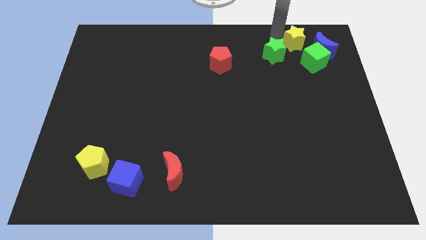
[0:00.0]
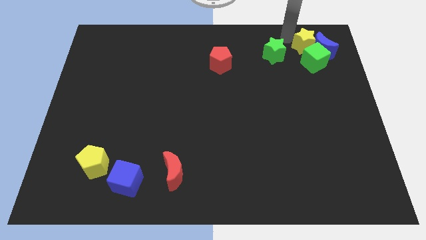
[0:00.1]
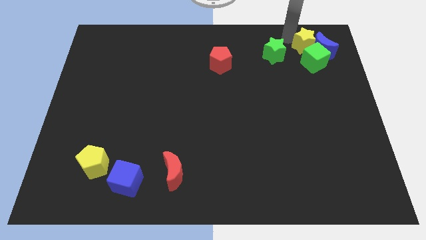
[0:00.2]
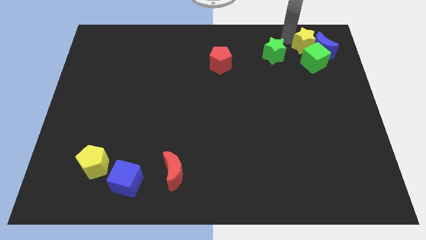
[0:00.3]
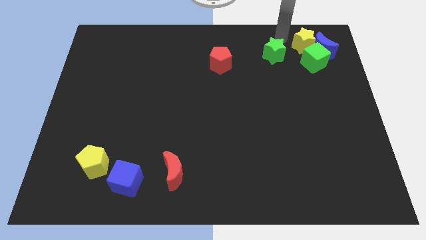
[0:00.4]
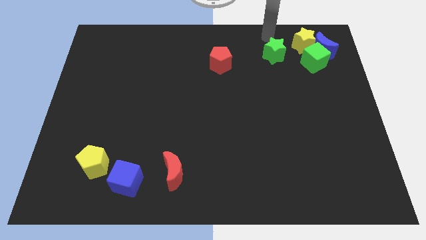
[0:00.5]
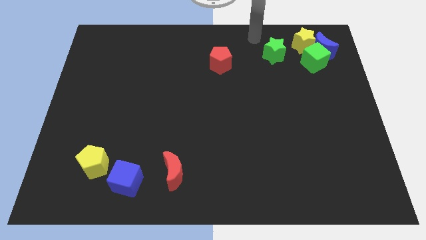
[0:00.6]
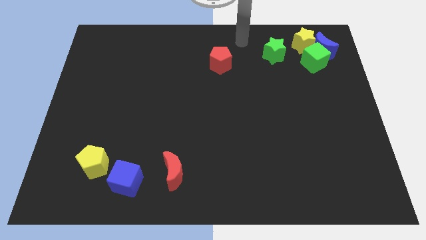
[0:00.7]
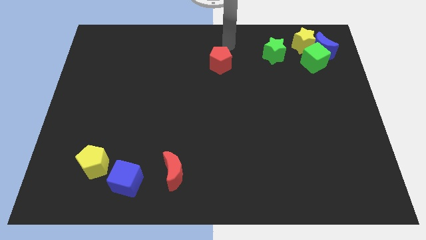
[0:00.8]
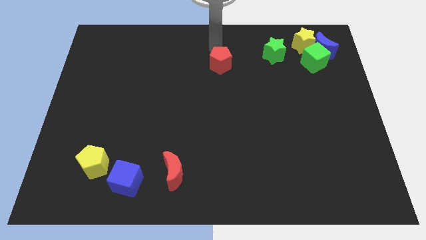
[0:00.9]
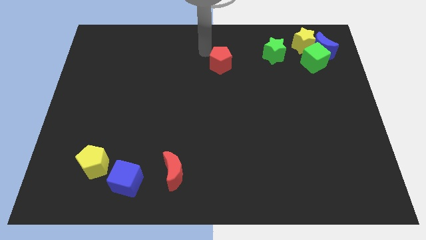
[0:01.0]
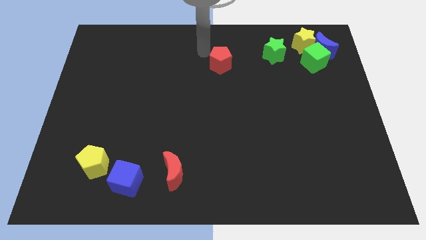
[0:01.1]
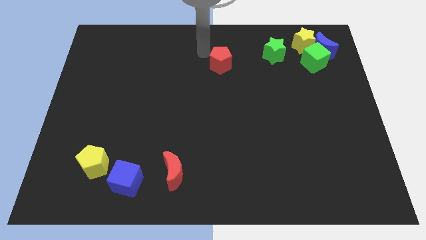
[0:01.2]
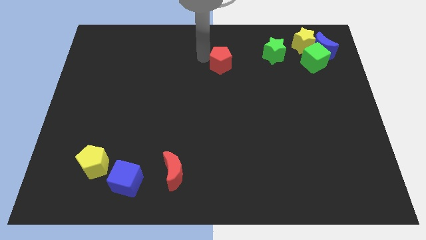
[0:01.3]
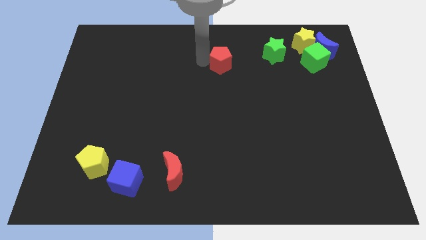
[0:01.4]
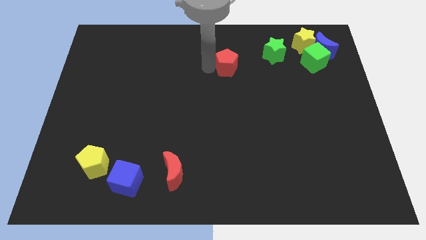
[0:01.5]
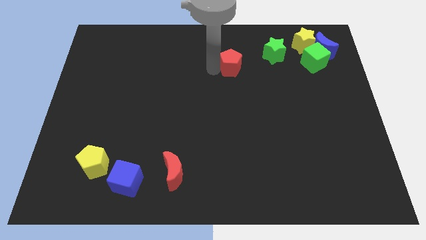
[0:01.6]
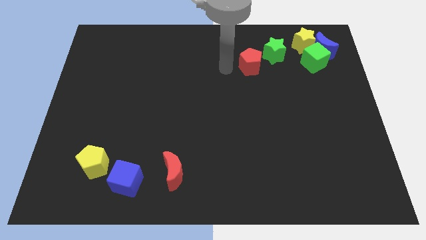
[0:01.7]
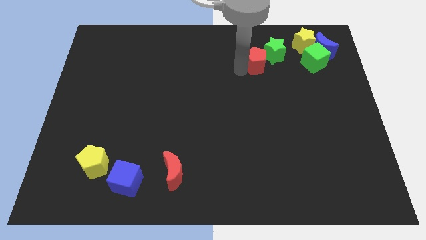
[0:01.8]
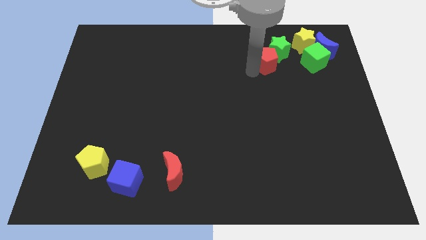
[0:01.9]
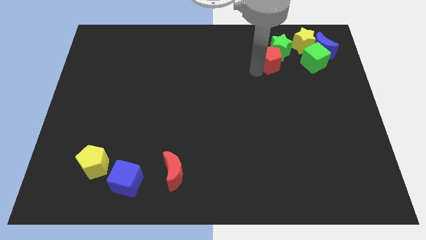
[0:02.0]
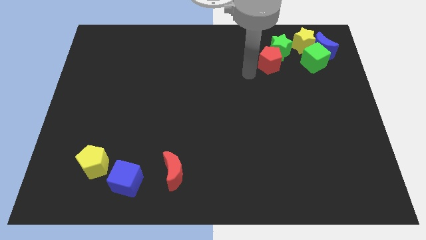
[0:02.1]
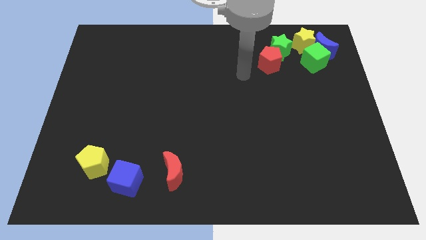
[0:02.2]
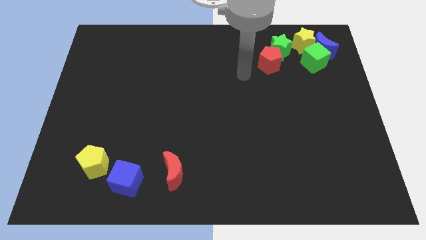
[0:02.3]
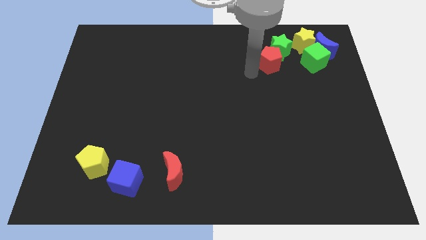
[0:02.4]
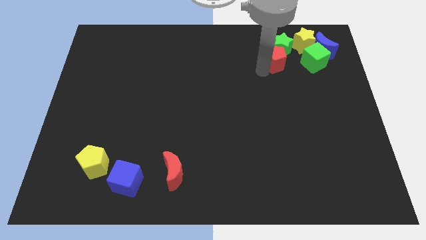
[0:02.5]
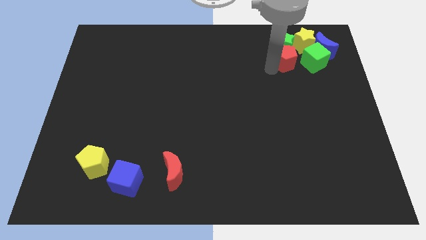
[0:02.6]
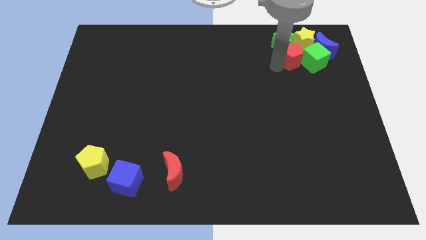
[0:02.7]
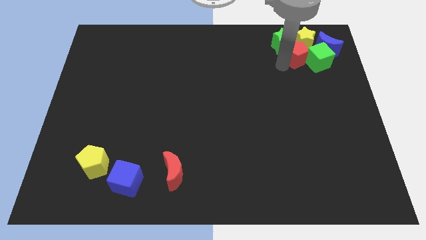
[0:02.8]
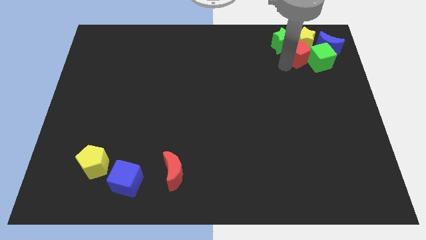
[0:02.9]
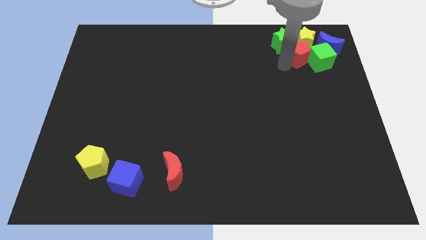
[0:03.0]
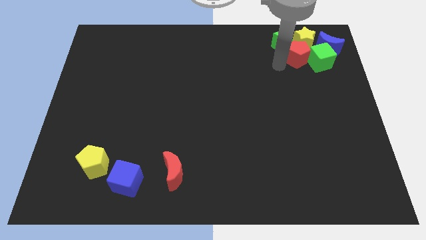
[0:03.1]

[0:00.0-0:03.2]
push the red pentagon into the group of blocks

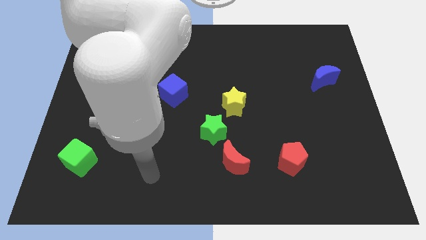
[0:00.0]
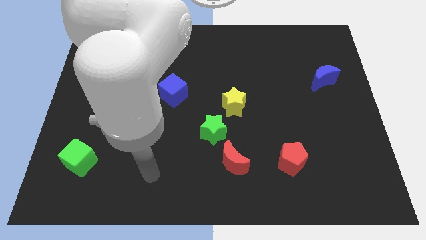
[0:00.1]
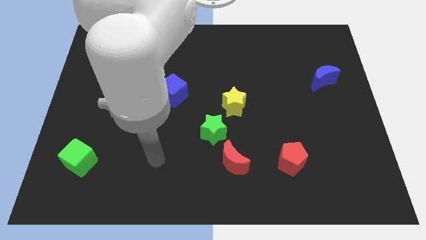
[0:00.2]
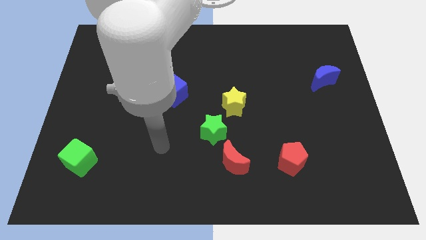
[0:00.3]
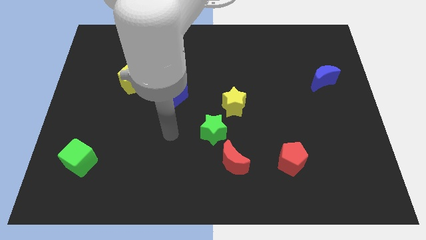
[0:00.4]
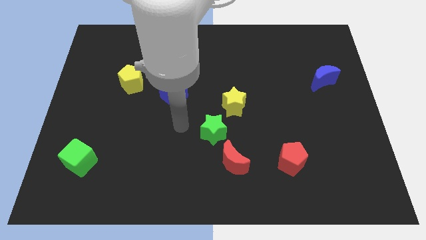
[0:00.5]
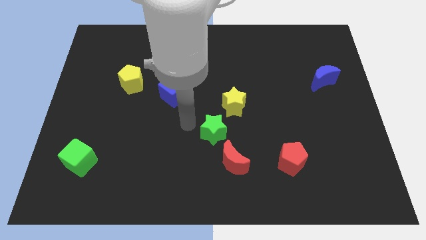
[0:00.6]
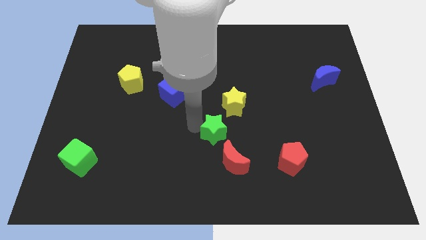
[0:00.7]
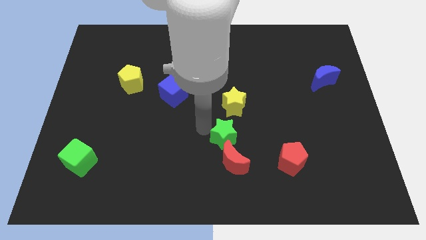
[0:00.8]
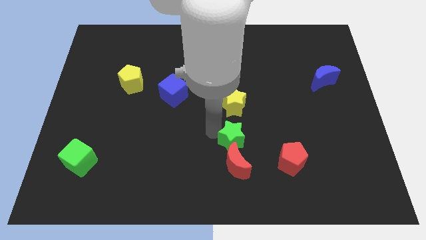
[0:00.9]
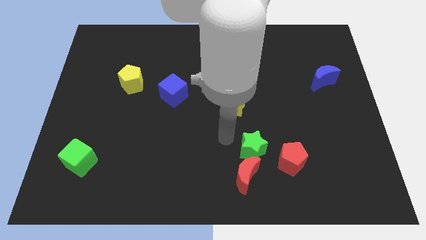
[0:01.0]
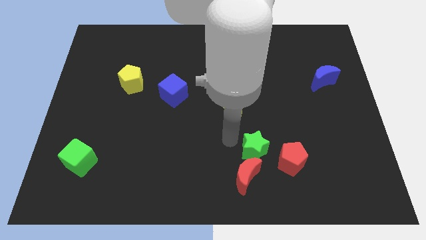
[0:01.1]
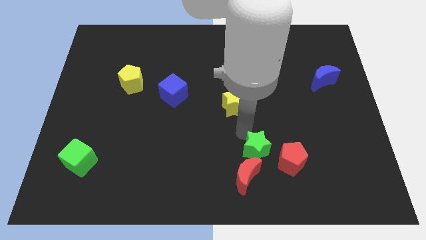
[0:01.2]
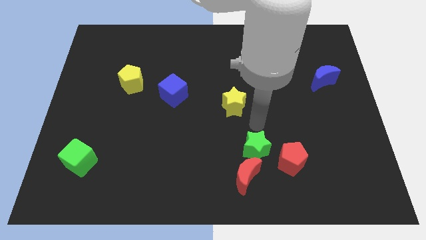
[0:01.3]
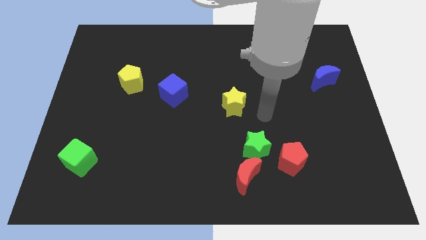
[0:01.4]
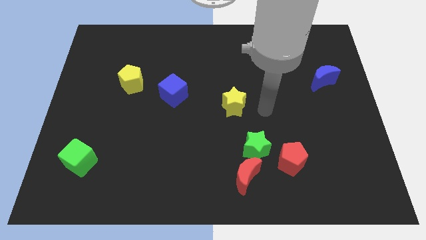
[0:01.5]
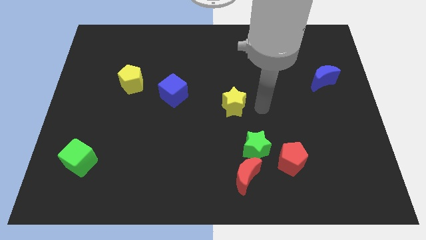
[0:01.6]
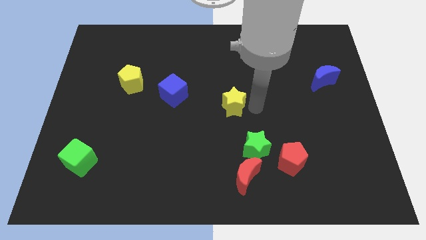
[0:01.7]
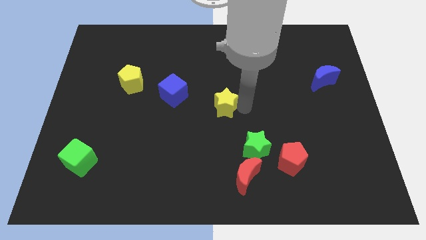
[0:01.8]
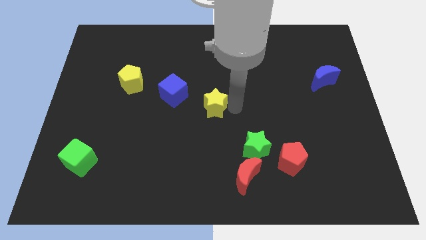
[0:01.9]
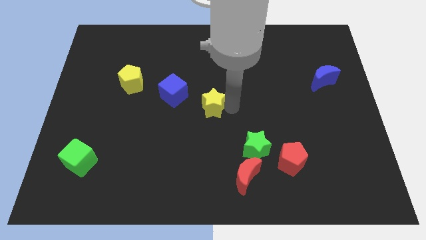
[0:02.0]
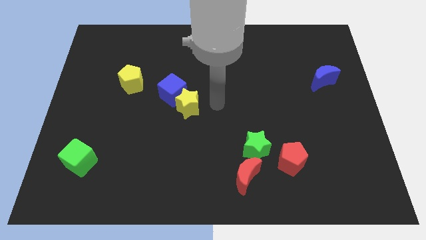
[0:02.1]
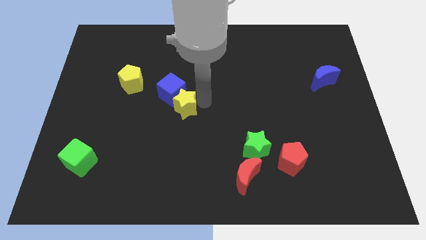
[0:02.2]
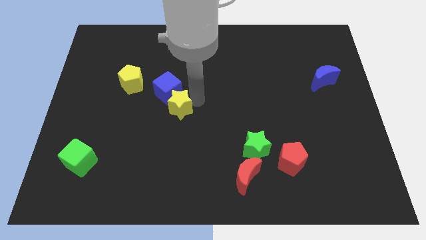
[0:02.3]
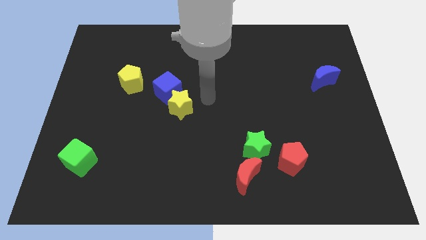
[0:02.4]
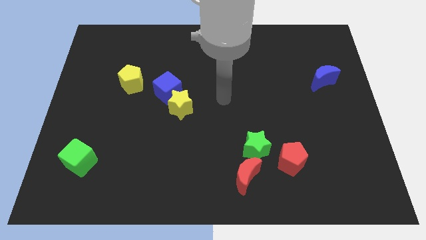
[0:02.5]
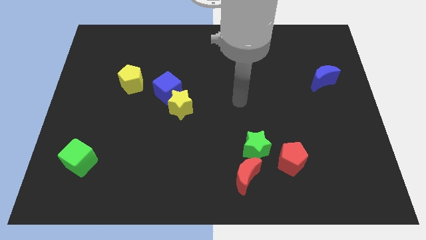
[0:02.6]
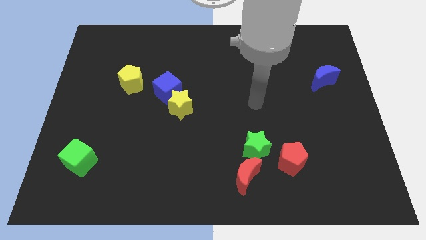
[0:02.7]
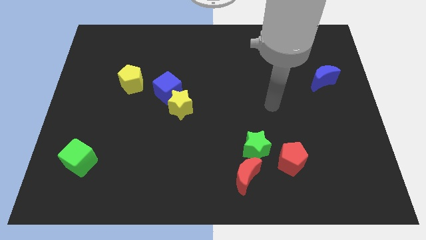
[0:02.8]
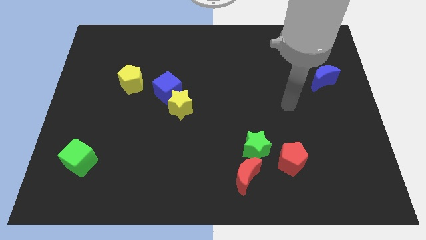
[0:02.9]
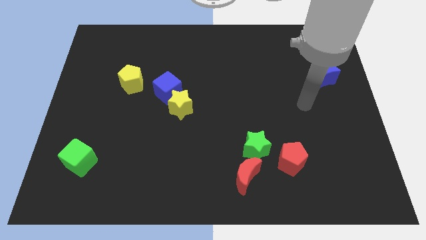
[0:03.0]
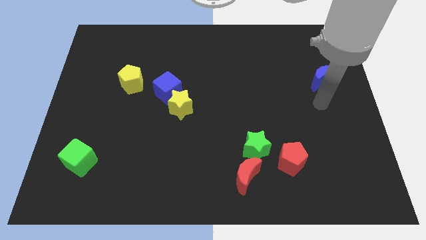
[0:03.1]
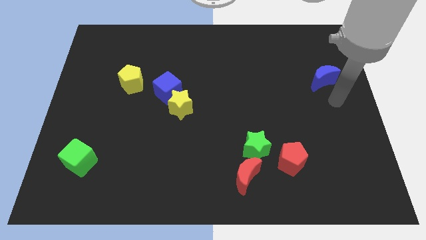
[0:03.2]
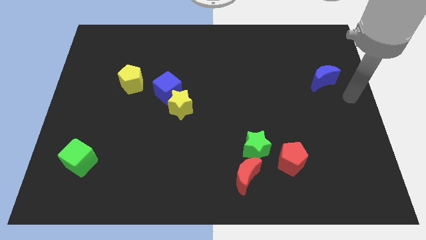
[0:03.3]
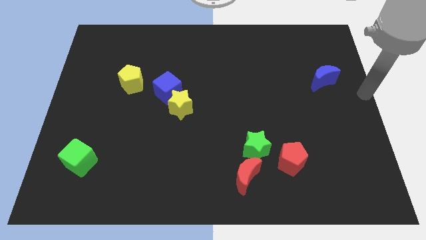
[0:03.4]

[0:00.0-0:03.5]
push the yellow star into the blue cube

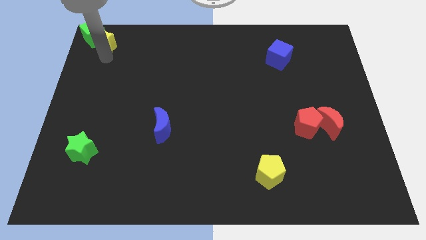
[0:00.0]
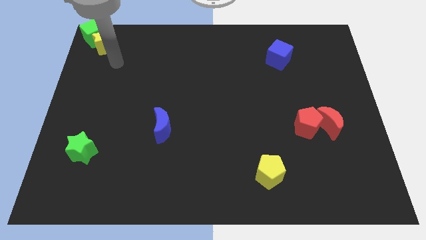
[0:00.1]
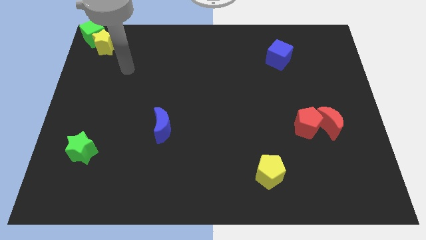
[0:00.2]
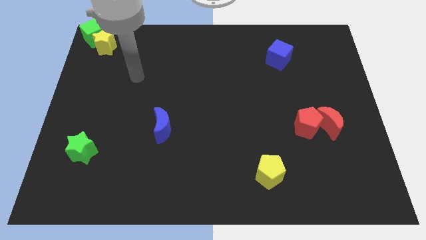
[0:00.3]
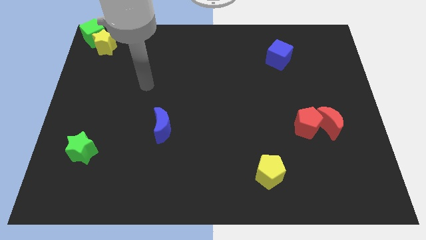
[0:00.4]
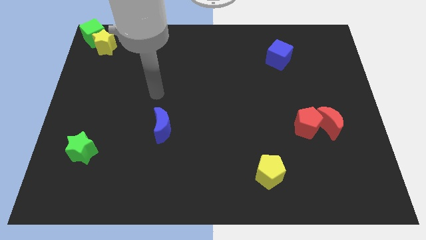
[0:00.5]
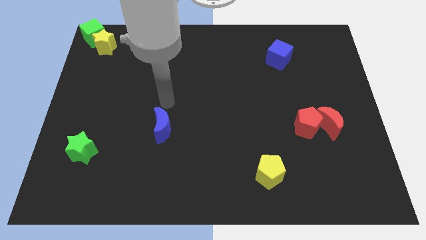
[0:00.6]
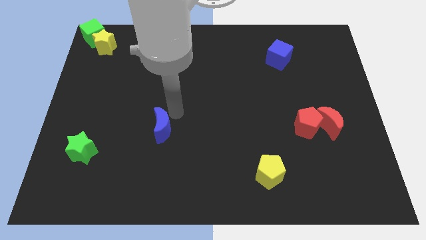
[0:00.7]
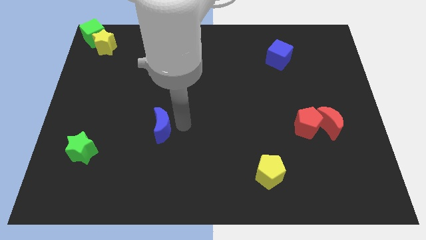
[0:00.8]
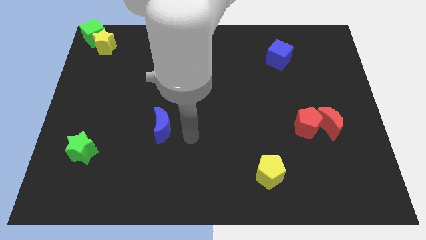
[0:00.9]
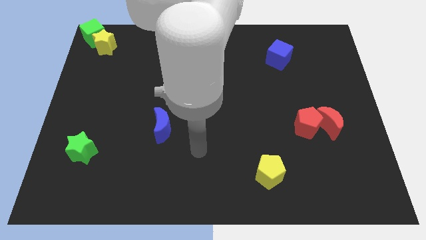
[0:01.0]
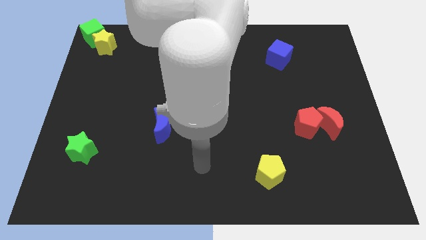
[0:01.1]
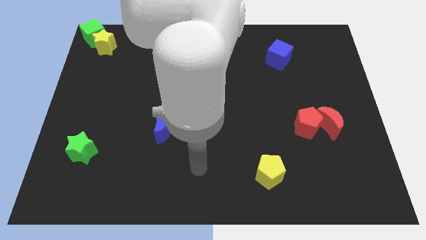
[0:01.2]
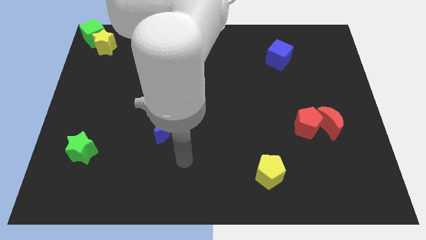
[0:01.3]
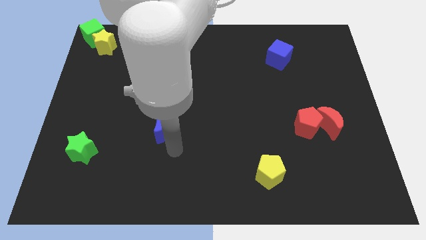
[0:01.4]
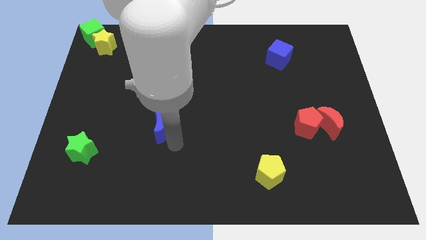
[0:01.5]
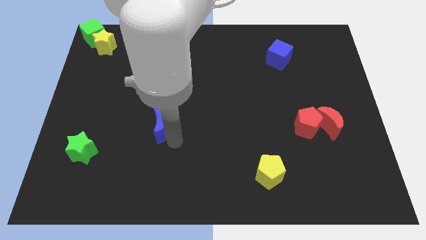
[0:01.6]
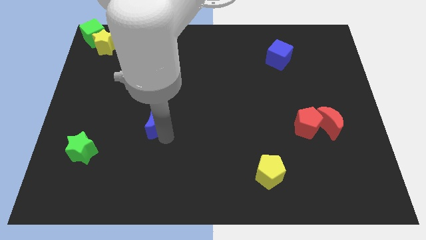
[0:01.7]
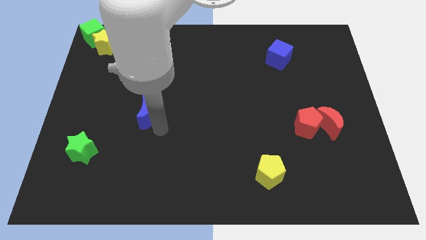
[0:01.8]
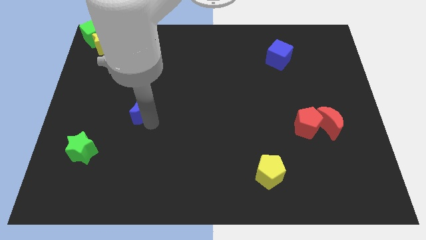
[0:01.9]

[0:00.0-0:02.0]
move the blue cube towards top
